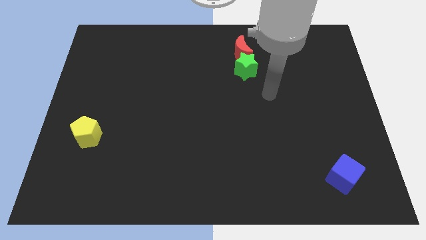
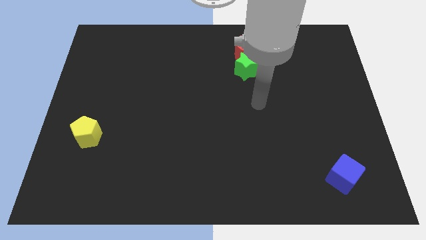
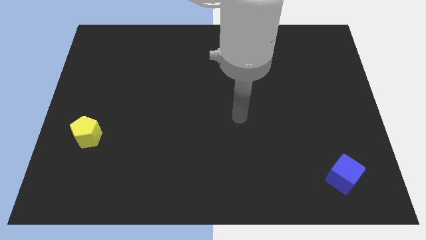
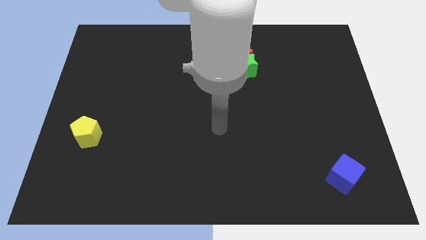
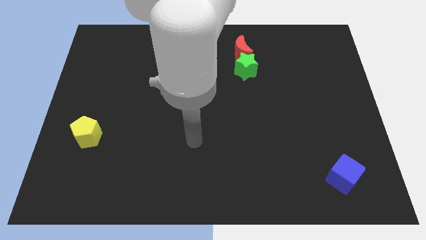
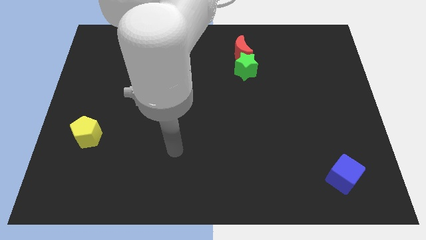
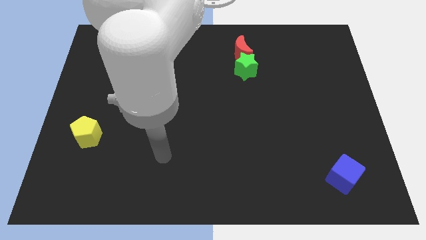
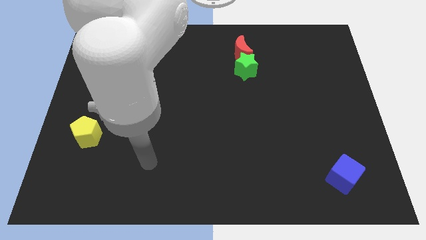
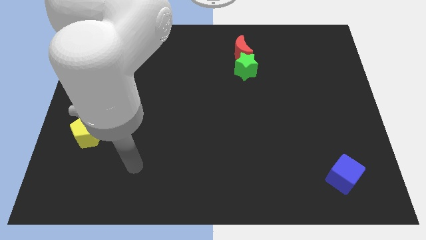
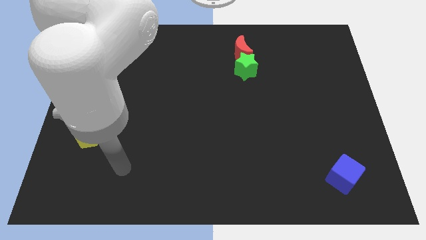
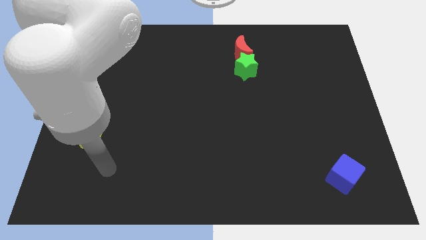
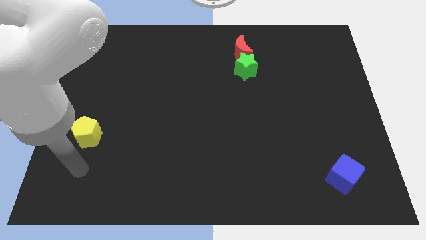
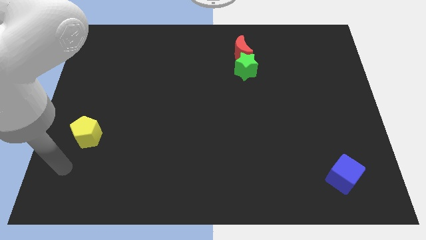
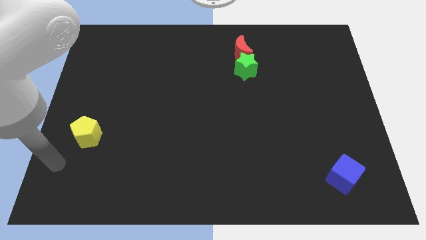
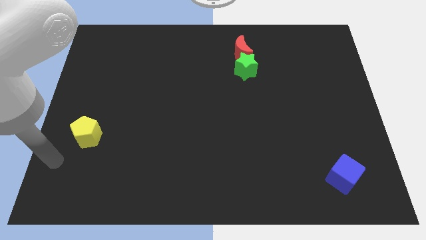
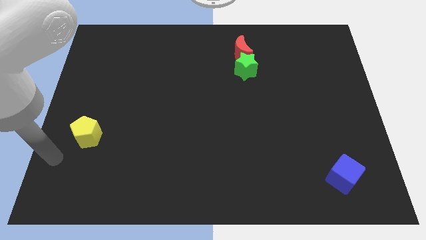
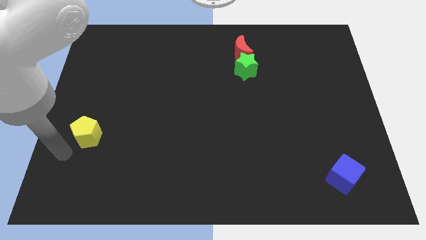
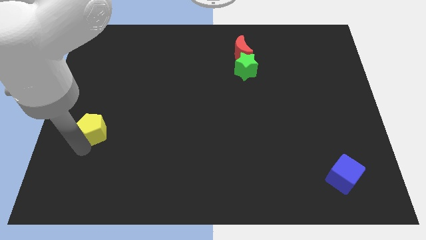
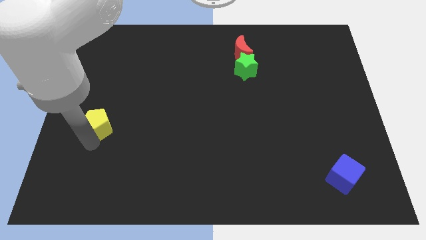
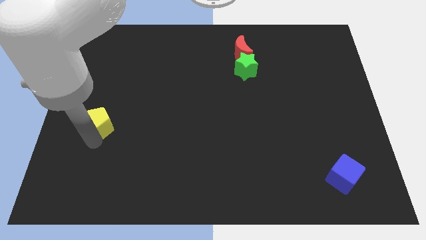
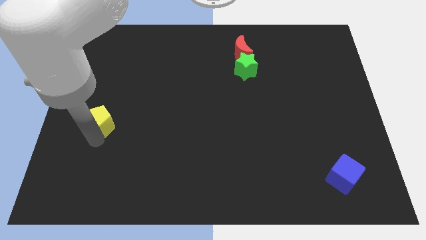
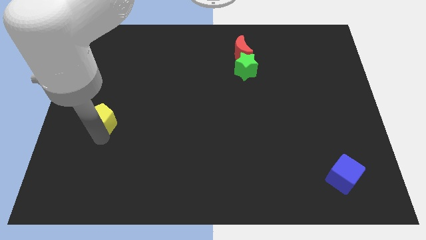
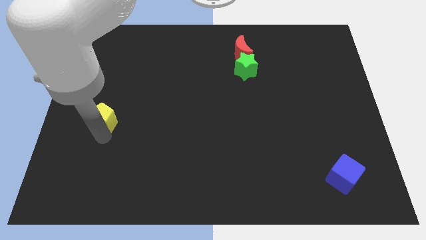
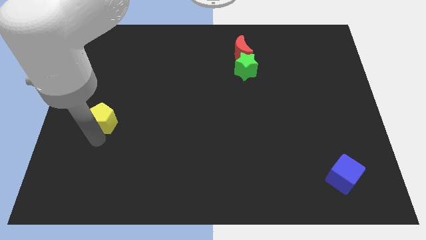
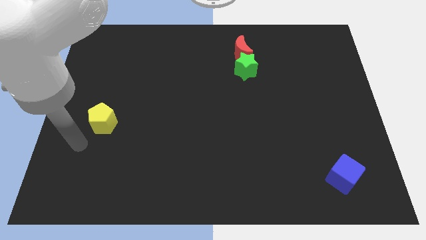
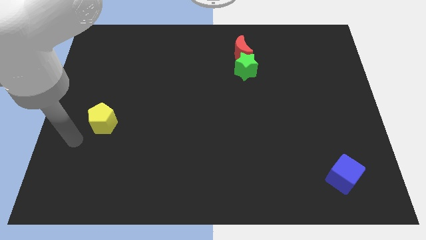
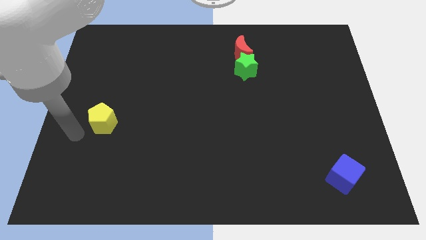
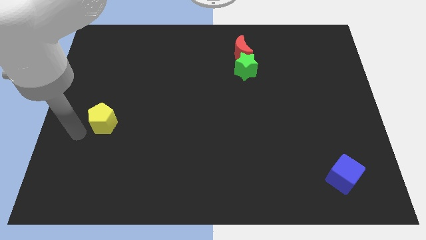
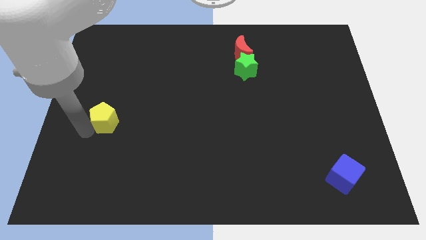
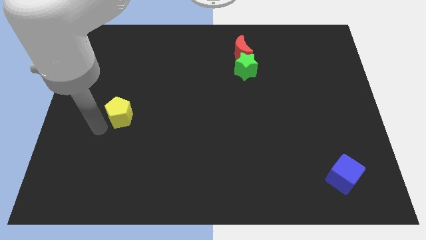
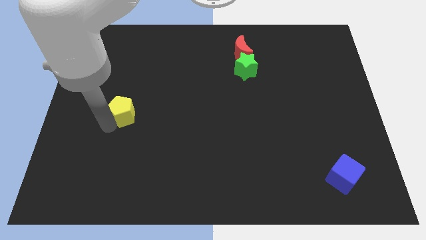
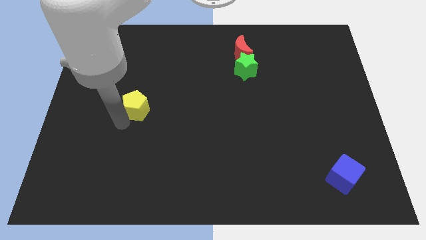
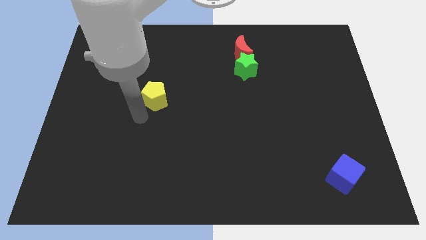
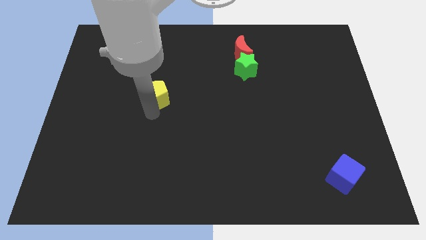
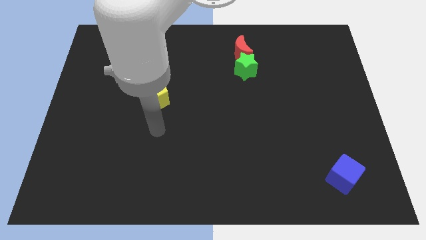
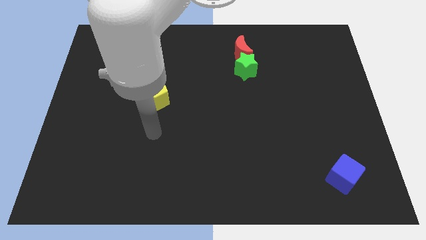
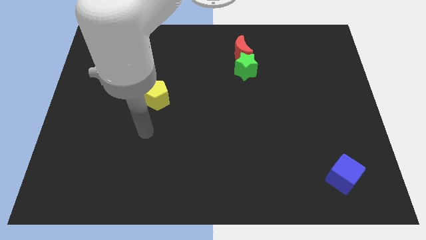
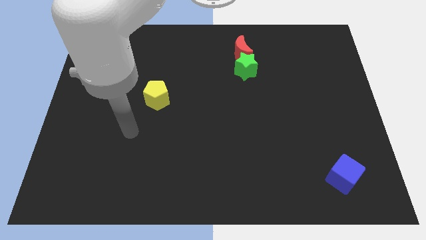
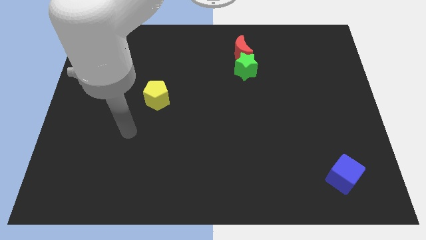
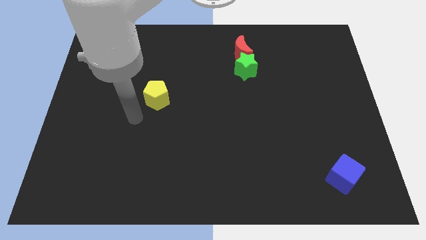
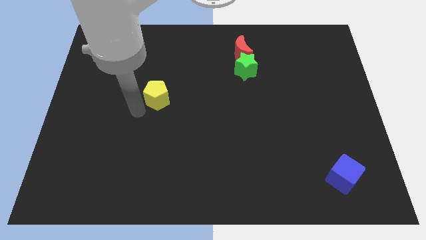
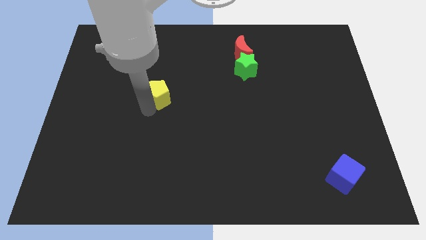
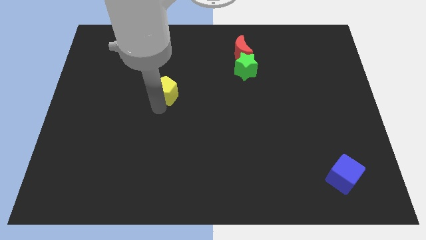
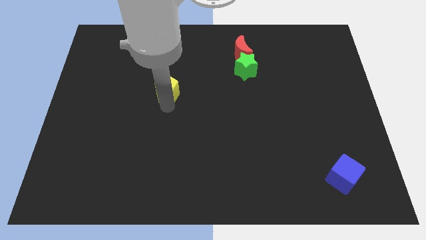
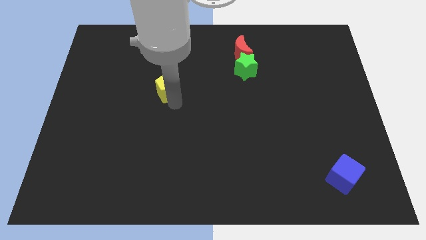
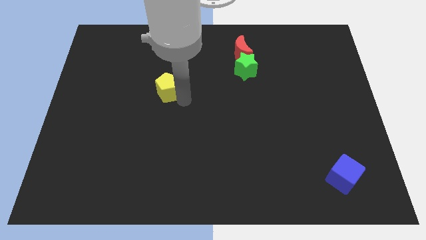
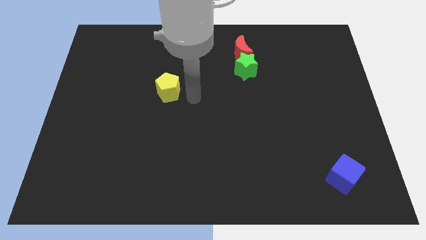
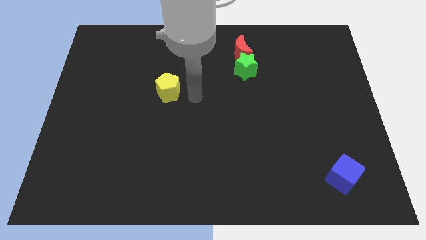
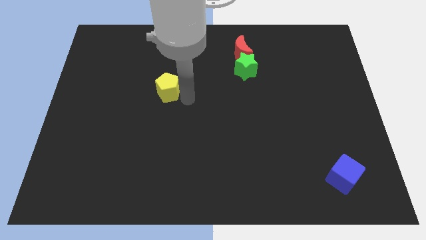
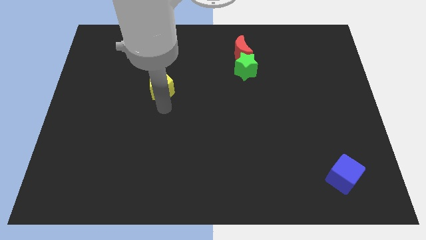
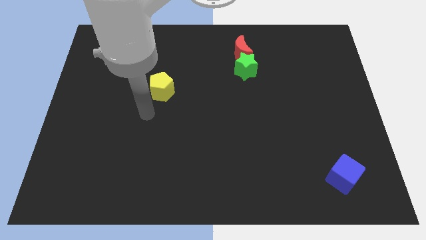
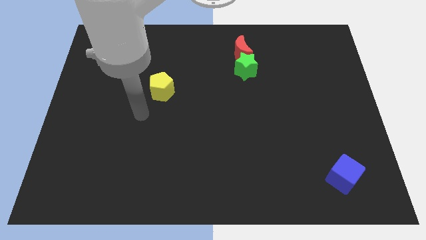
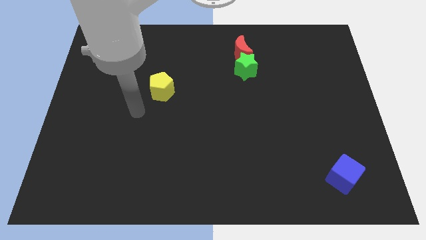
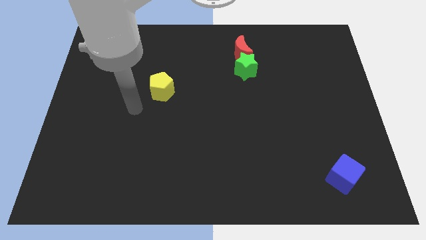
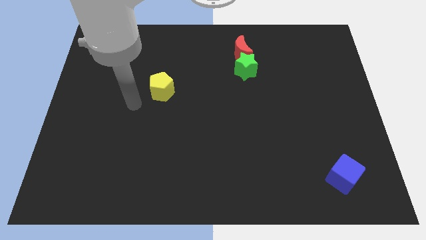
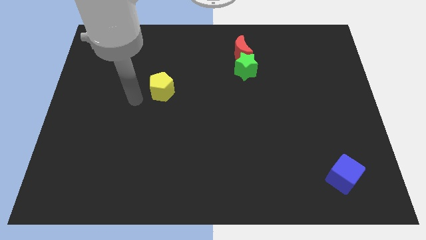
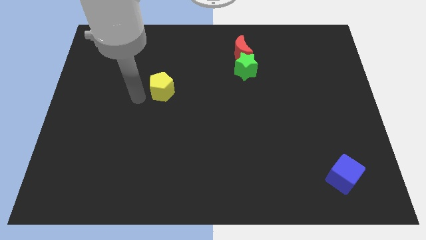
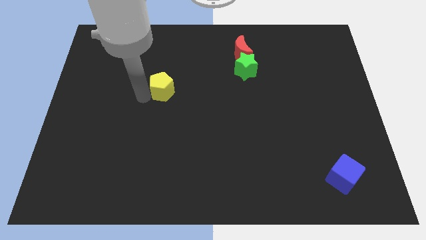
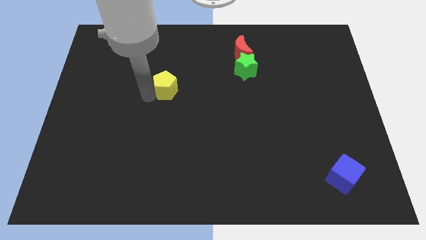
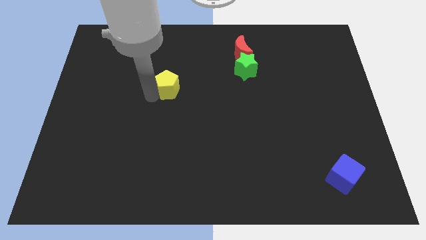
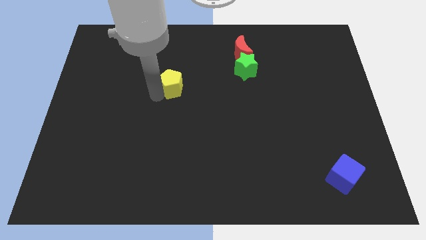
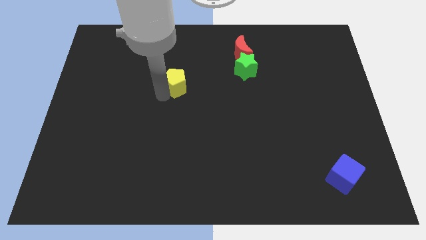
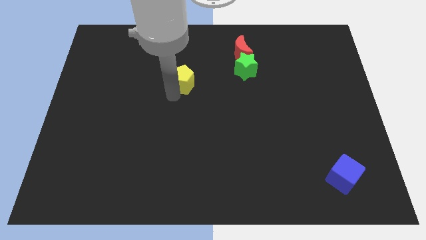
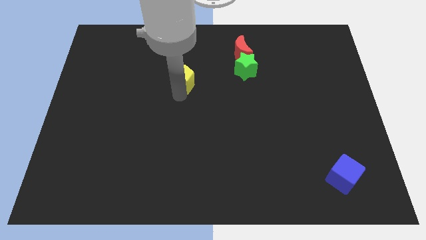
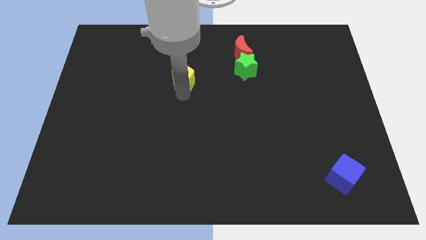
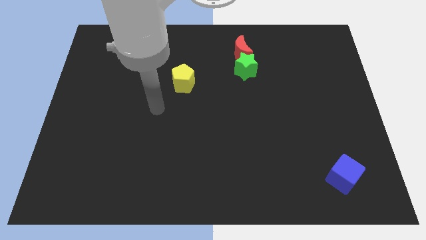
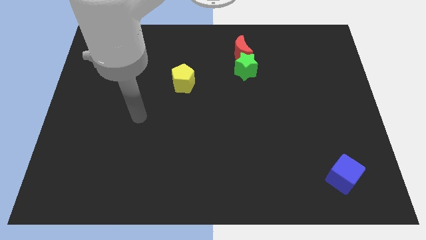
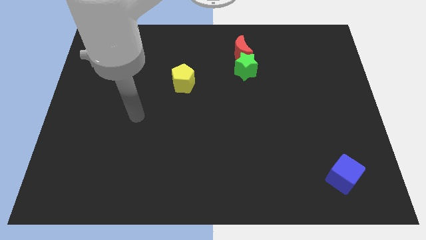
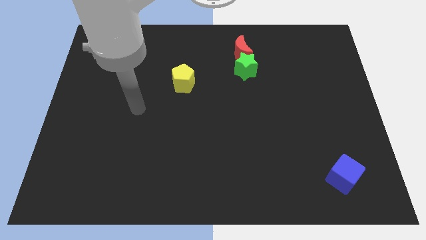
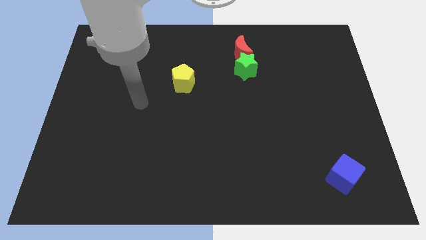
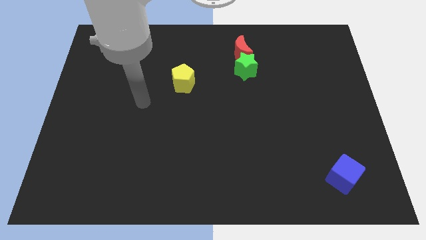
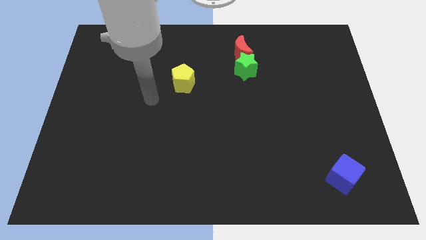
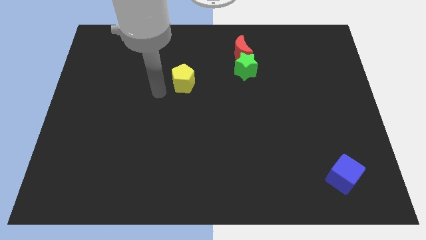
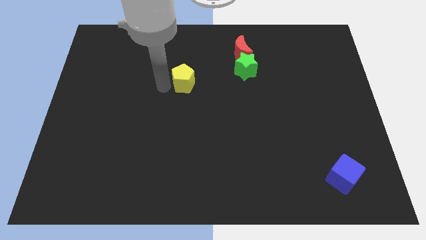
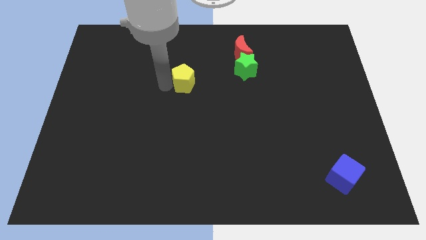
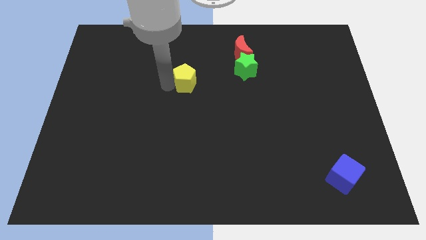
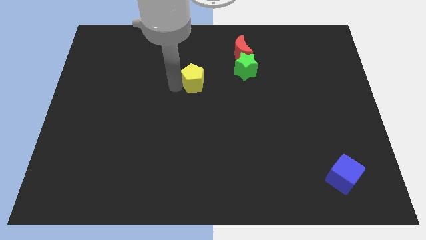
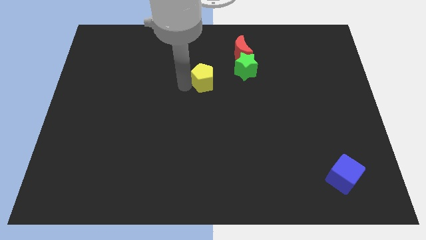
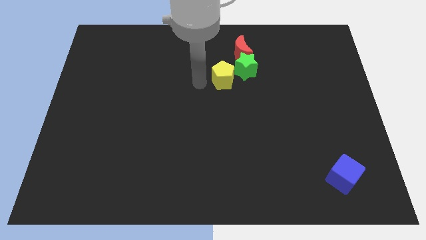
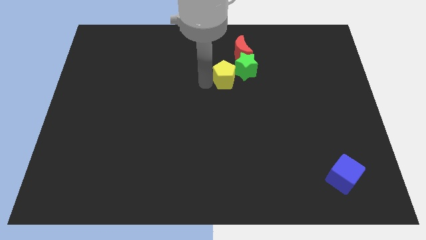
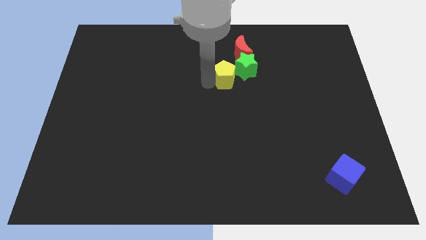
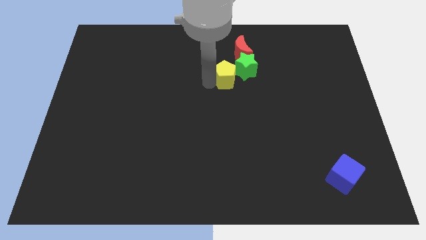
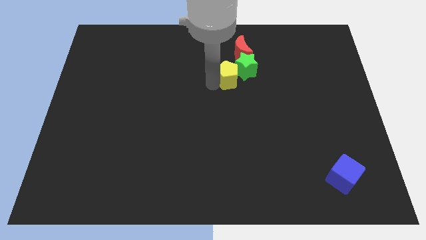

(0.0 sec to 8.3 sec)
push the pentagon close to the green block

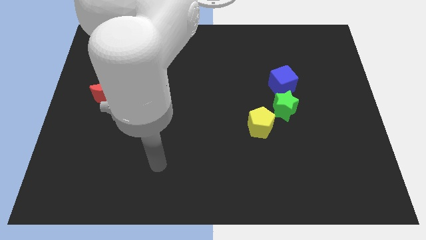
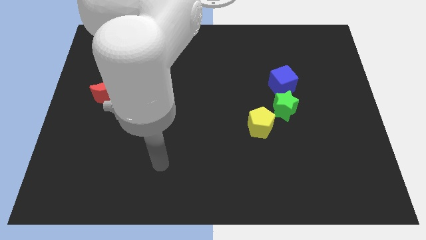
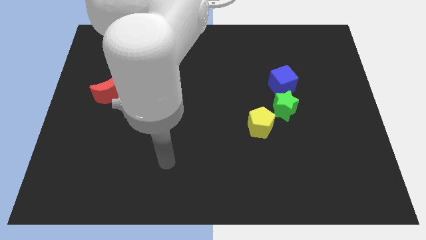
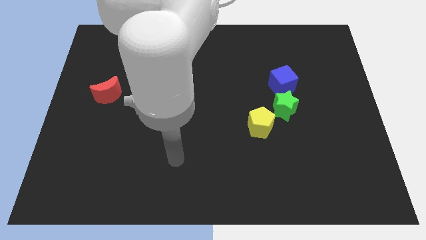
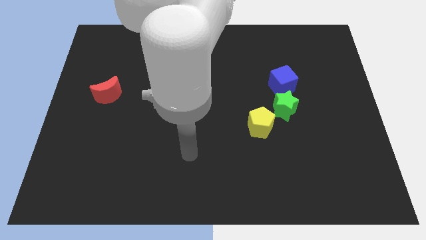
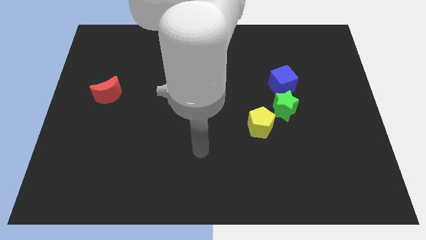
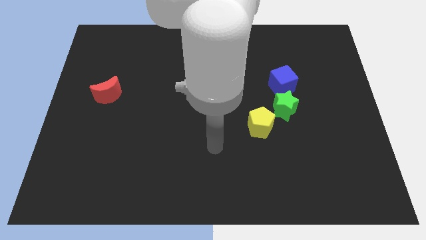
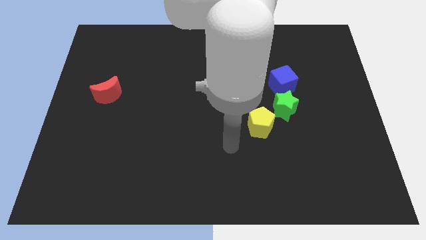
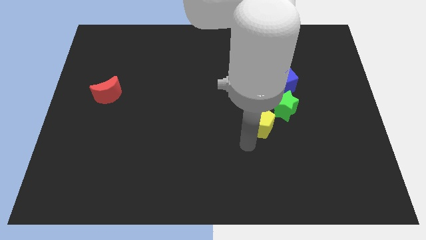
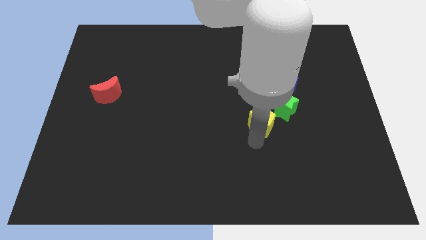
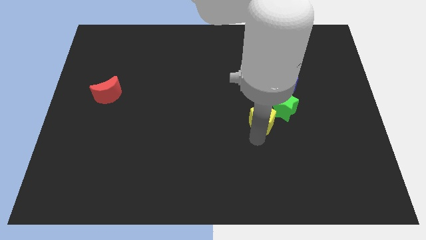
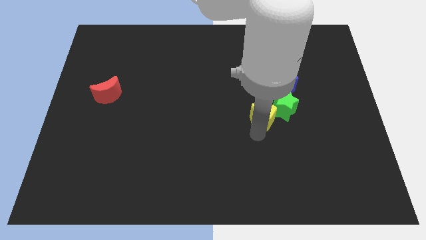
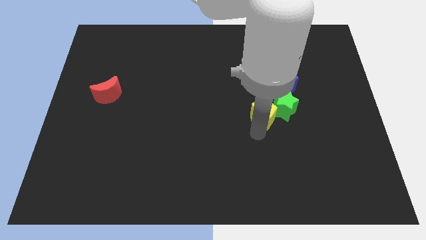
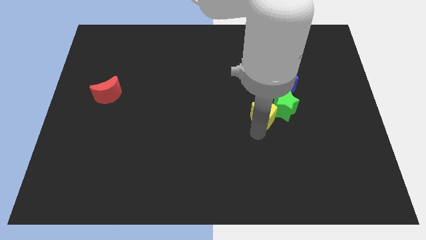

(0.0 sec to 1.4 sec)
push the yellow pentagon towards the star
